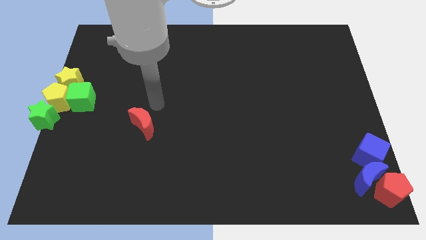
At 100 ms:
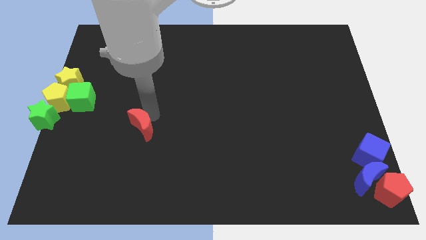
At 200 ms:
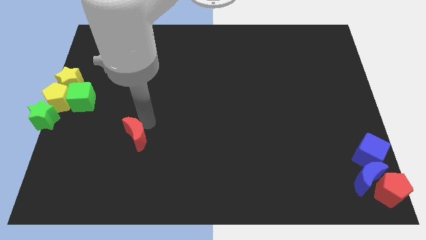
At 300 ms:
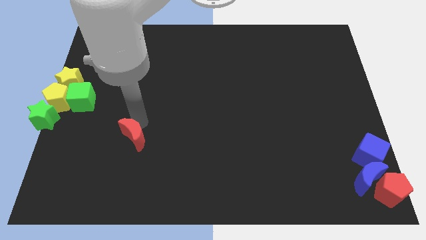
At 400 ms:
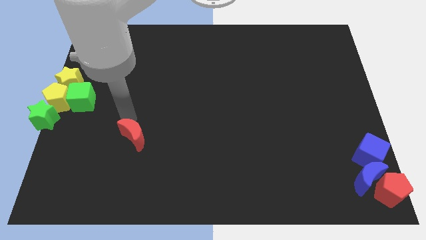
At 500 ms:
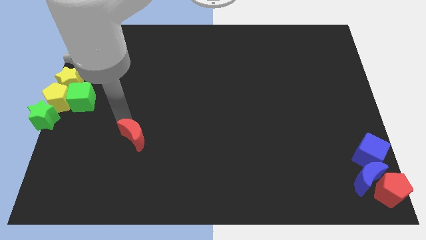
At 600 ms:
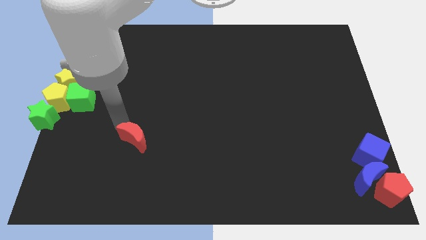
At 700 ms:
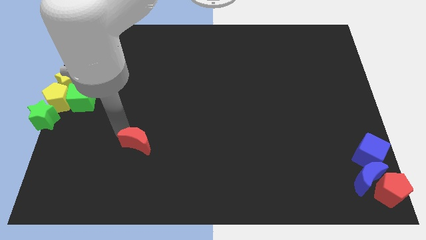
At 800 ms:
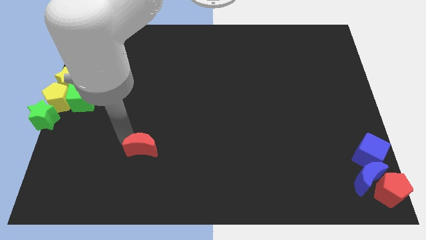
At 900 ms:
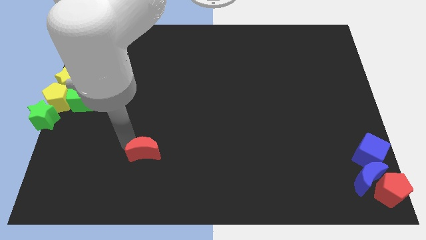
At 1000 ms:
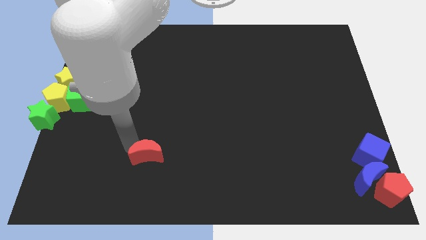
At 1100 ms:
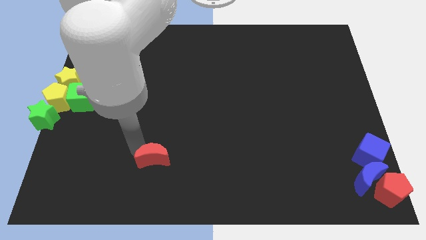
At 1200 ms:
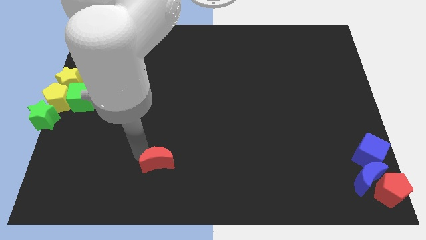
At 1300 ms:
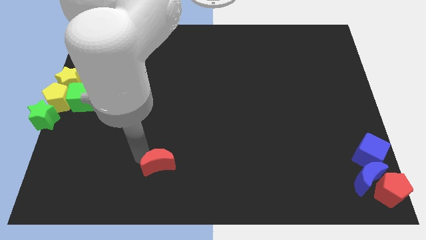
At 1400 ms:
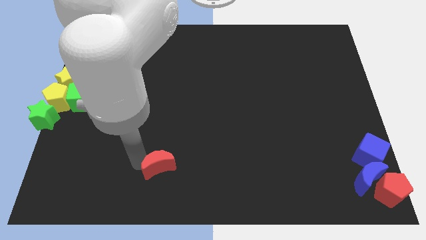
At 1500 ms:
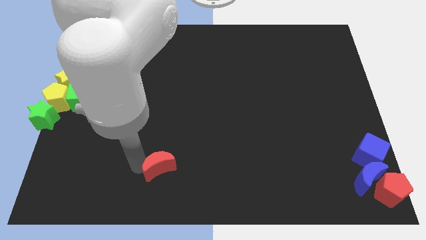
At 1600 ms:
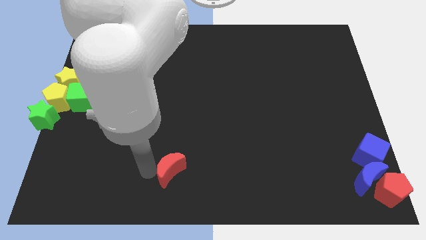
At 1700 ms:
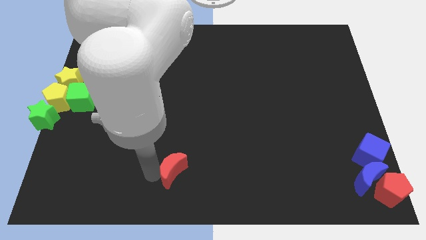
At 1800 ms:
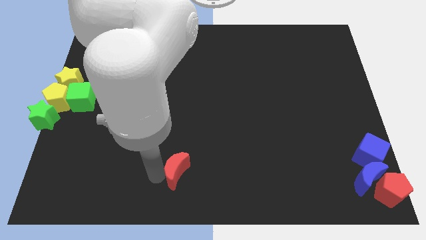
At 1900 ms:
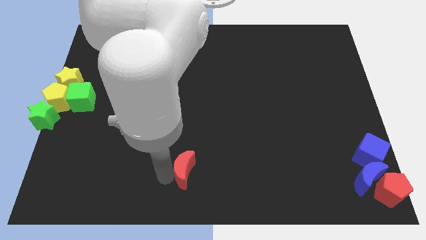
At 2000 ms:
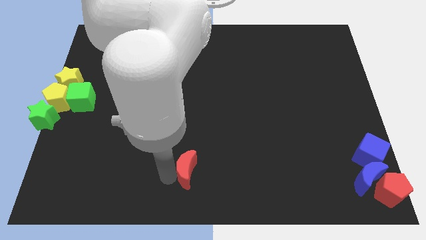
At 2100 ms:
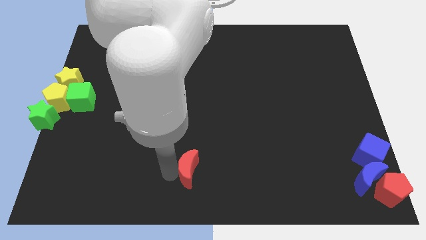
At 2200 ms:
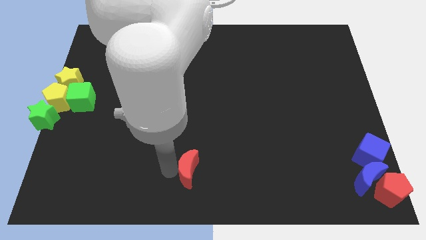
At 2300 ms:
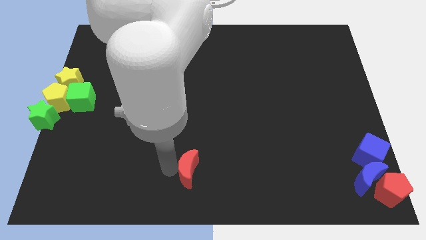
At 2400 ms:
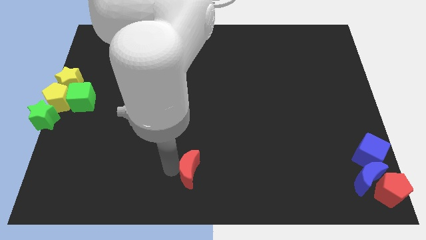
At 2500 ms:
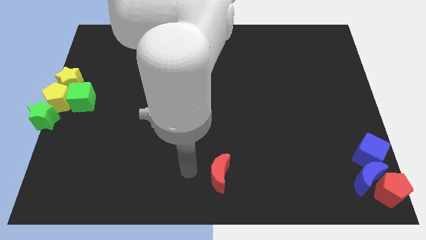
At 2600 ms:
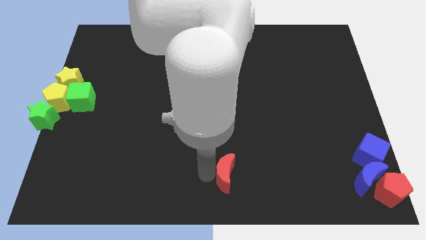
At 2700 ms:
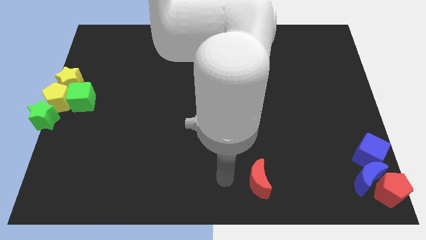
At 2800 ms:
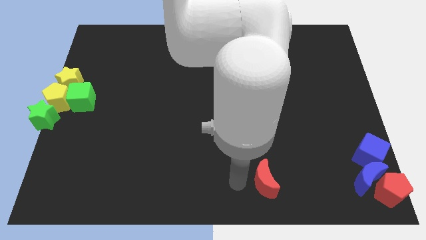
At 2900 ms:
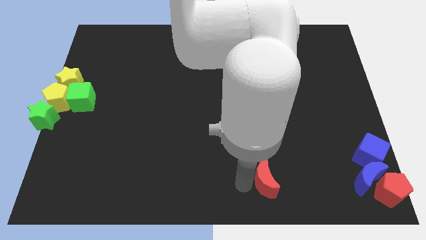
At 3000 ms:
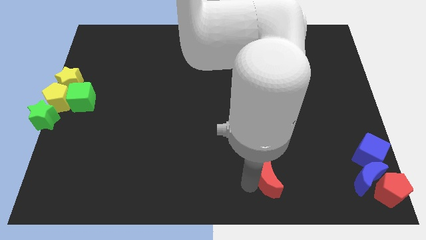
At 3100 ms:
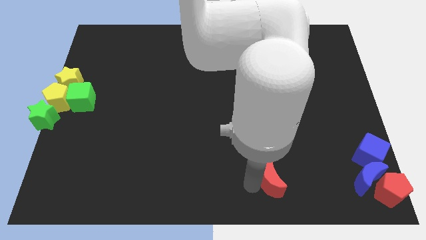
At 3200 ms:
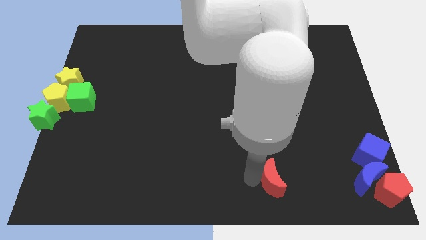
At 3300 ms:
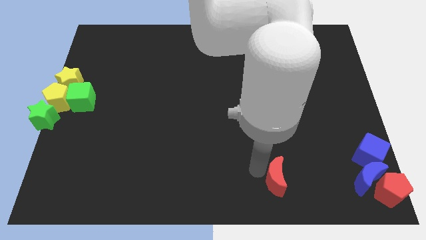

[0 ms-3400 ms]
push the red crescent to the right

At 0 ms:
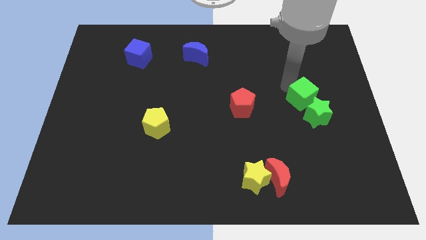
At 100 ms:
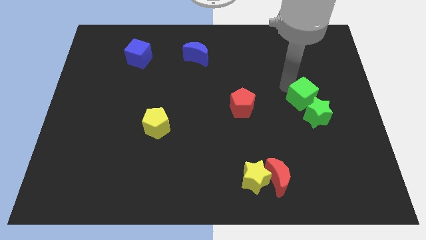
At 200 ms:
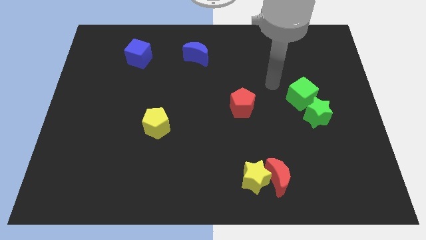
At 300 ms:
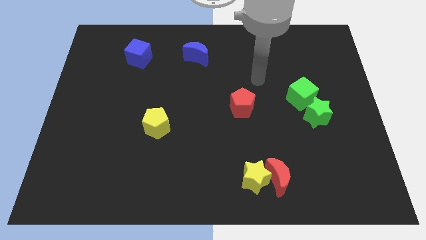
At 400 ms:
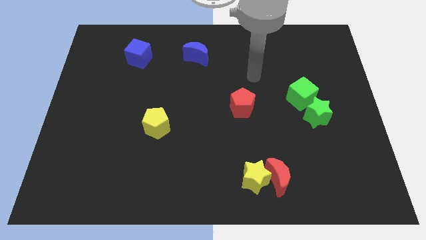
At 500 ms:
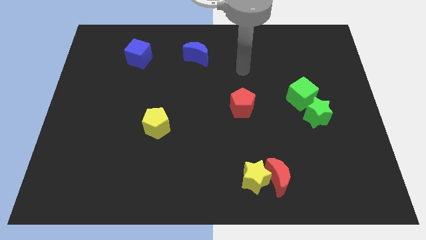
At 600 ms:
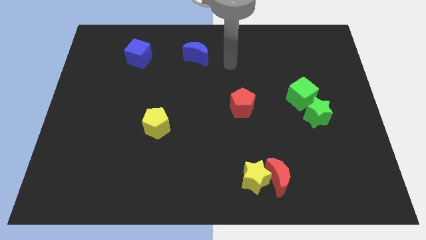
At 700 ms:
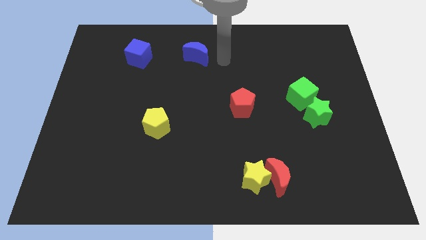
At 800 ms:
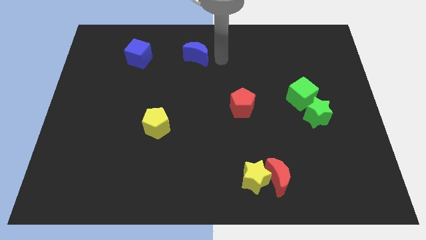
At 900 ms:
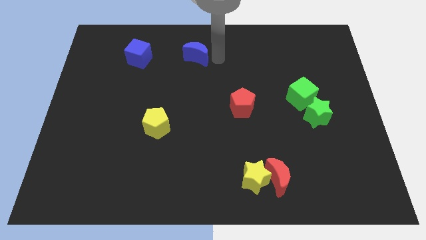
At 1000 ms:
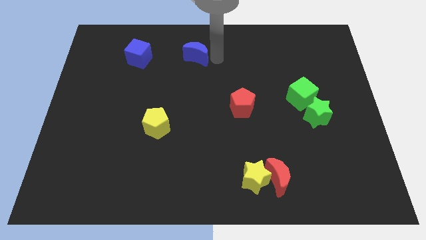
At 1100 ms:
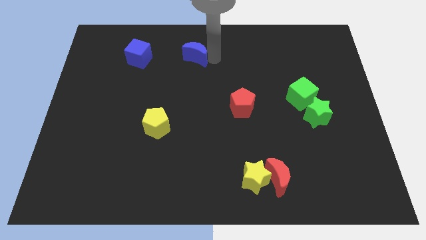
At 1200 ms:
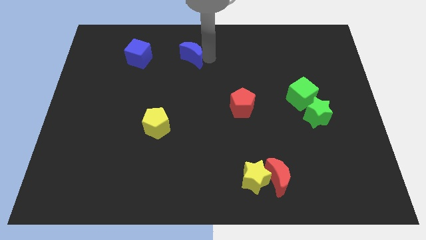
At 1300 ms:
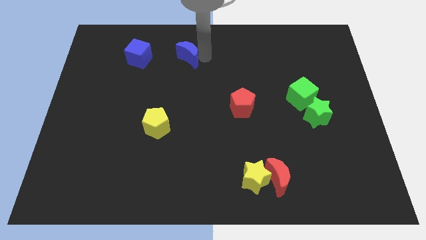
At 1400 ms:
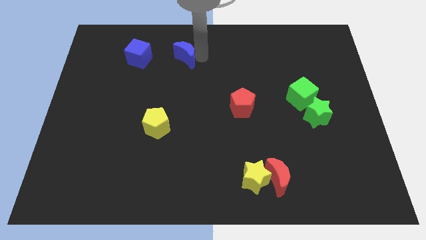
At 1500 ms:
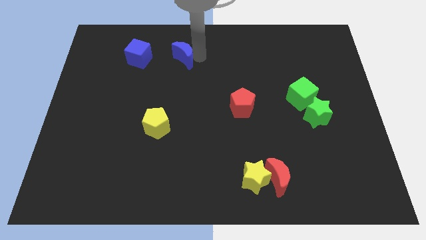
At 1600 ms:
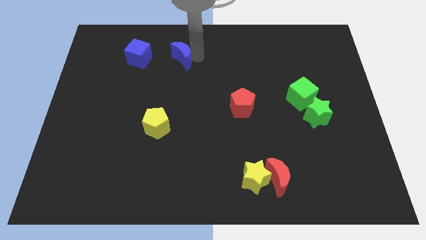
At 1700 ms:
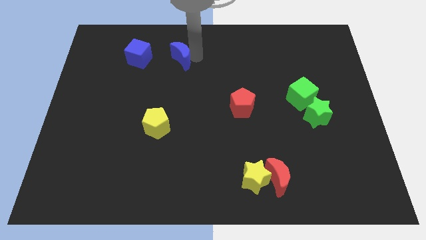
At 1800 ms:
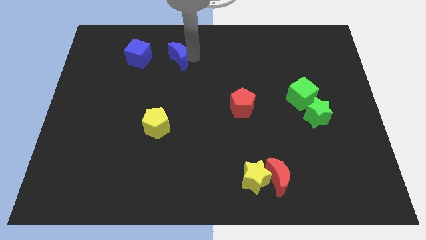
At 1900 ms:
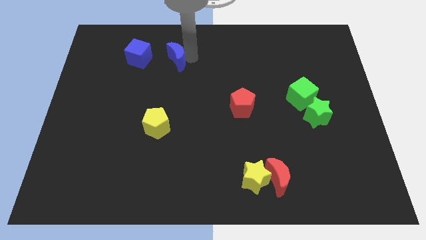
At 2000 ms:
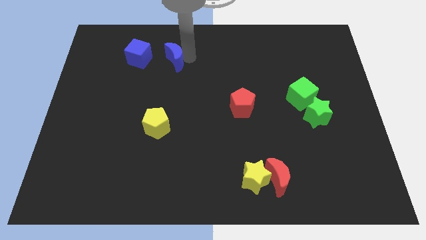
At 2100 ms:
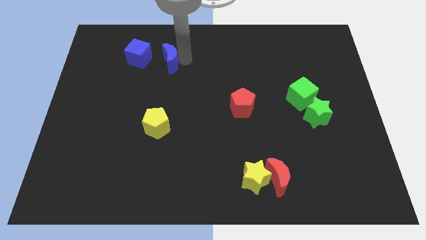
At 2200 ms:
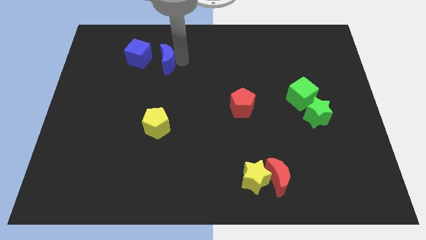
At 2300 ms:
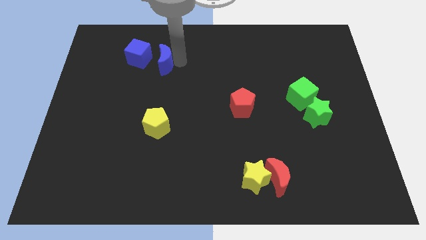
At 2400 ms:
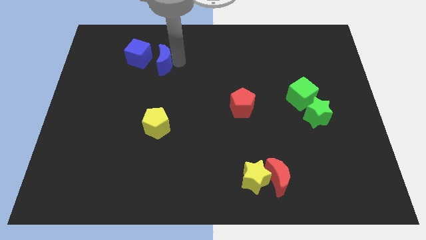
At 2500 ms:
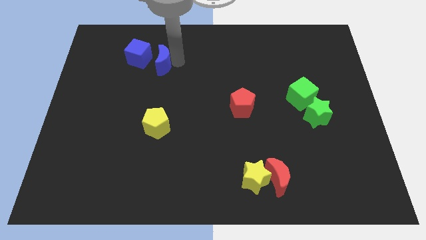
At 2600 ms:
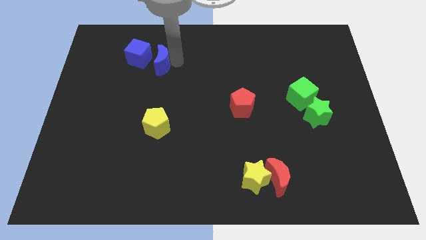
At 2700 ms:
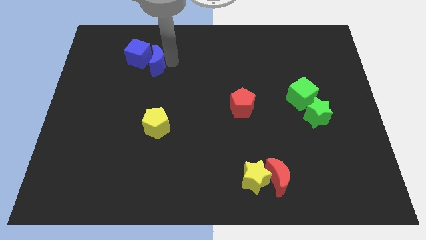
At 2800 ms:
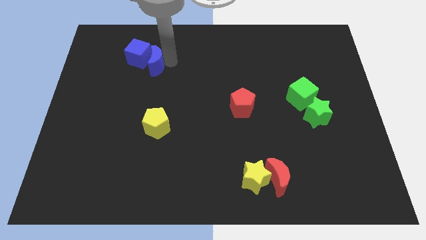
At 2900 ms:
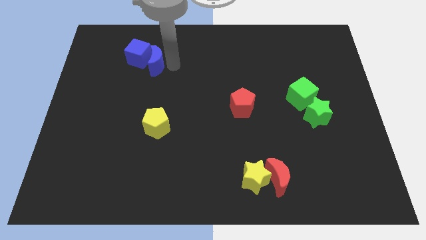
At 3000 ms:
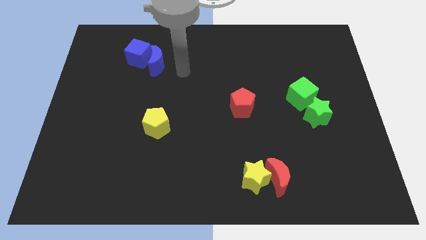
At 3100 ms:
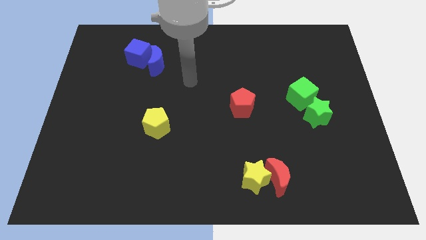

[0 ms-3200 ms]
move the blue moon into the right side of the blue cube

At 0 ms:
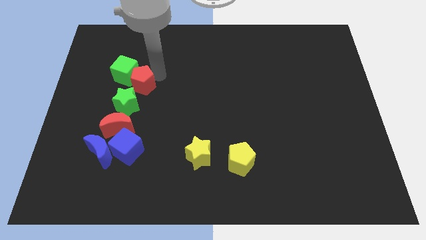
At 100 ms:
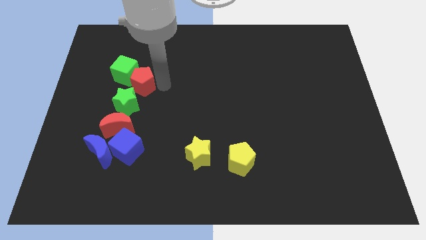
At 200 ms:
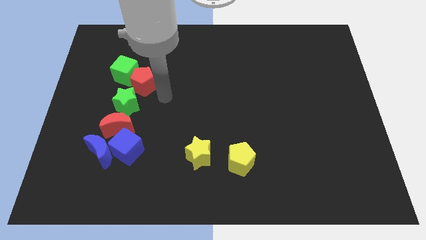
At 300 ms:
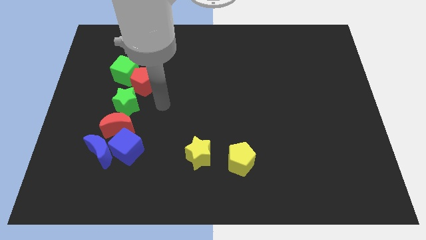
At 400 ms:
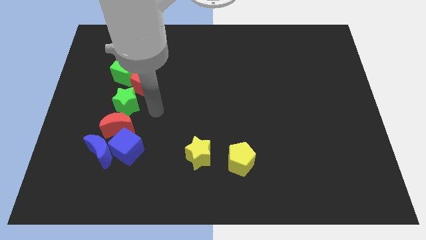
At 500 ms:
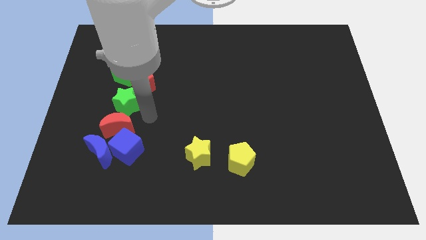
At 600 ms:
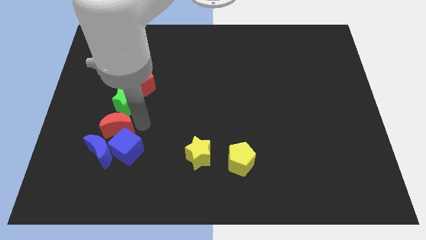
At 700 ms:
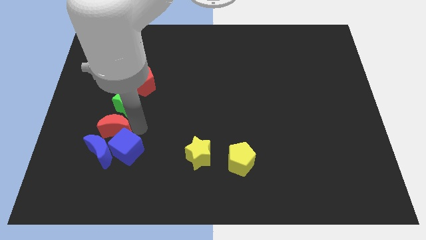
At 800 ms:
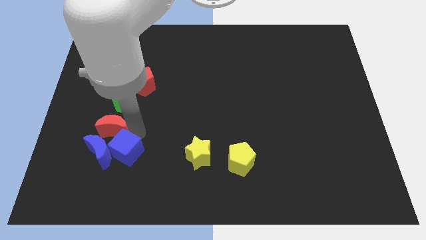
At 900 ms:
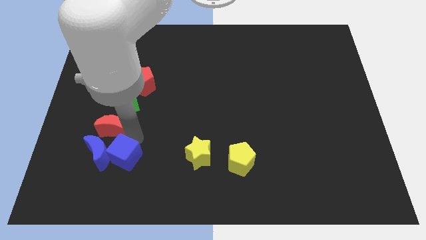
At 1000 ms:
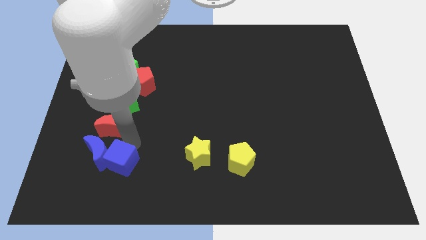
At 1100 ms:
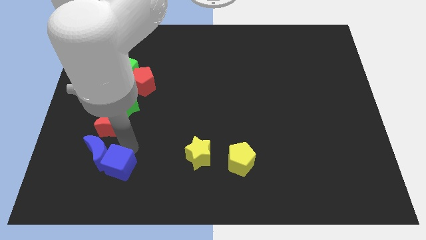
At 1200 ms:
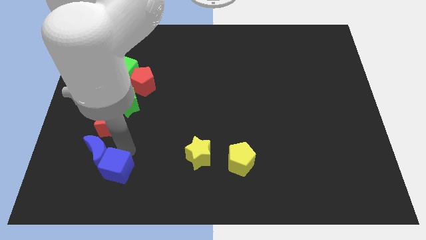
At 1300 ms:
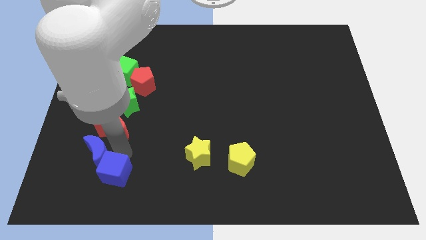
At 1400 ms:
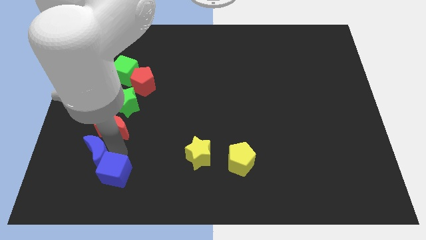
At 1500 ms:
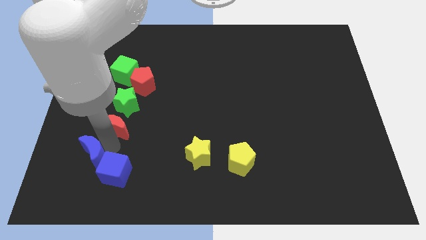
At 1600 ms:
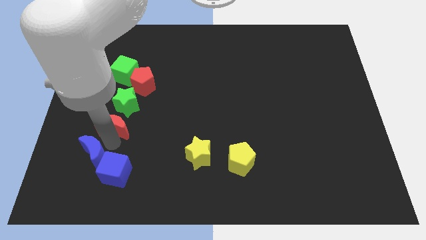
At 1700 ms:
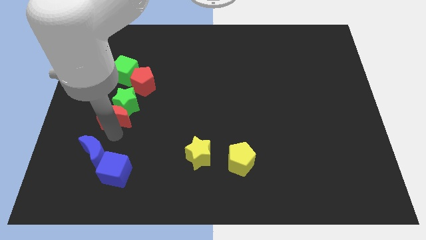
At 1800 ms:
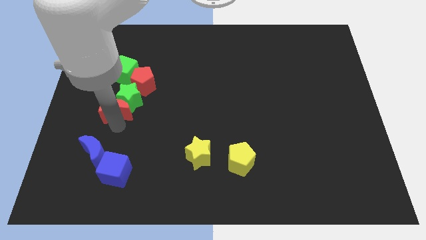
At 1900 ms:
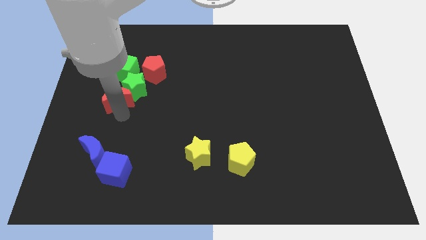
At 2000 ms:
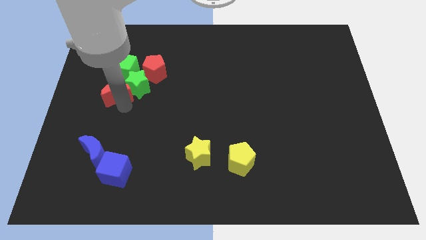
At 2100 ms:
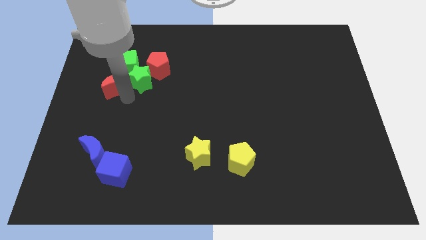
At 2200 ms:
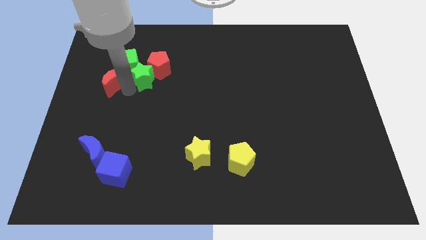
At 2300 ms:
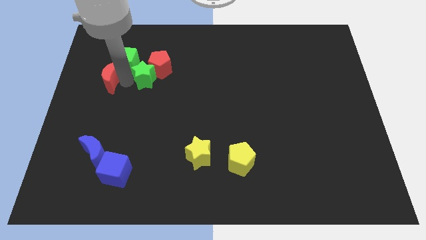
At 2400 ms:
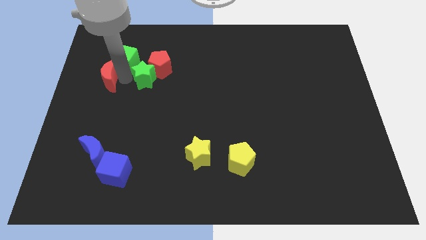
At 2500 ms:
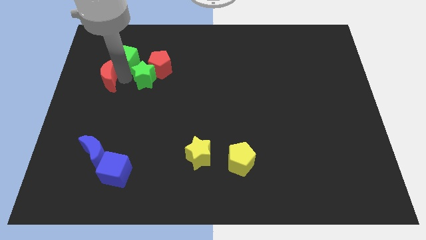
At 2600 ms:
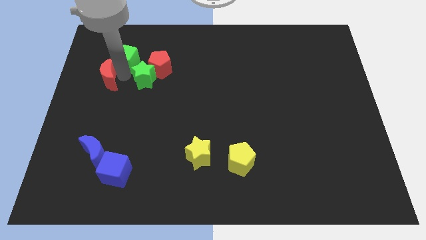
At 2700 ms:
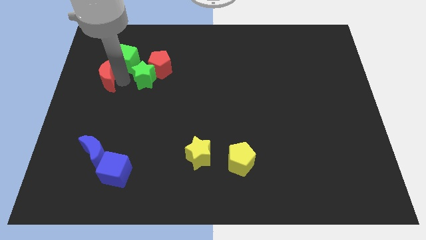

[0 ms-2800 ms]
push the group of blocks away from the group of blue blocks
